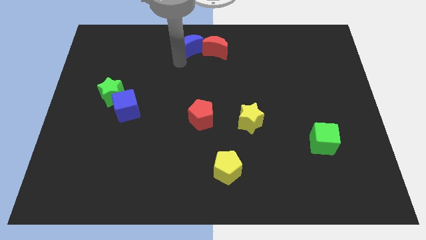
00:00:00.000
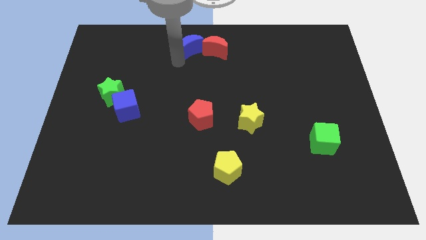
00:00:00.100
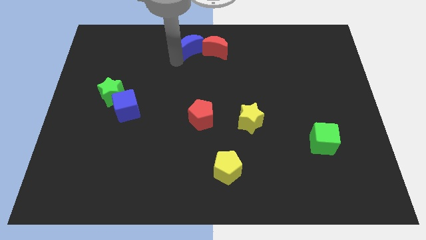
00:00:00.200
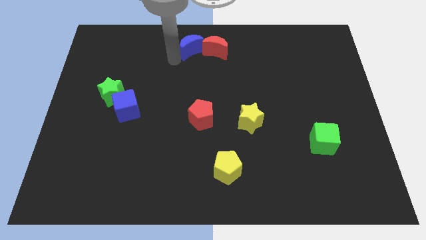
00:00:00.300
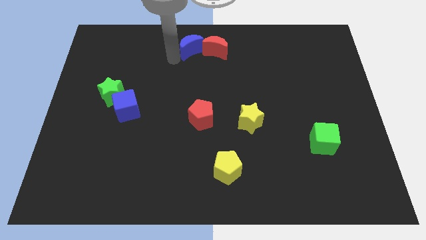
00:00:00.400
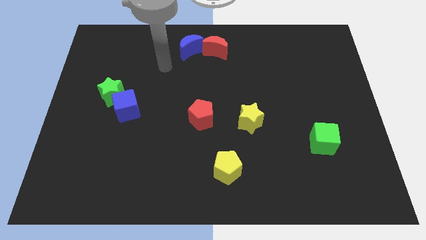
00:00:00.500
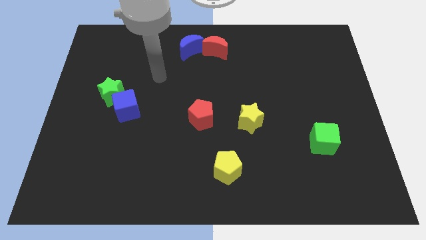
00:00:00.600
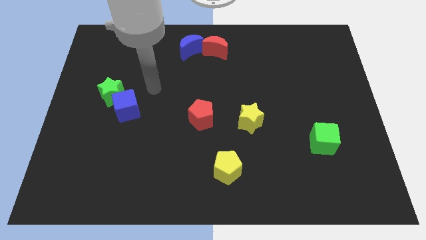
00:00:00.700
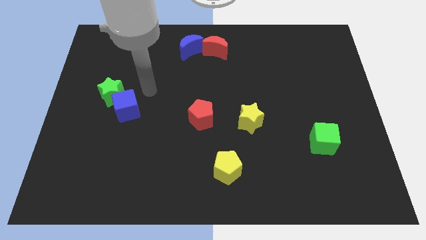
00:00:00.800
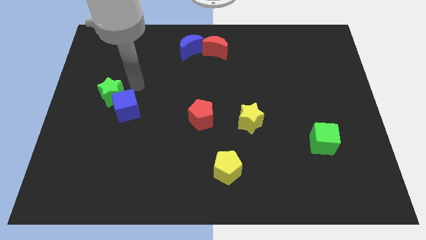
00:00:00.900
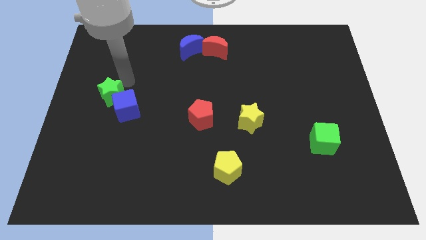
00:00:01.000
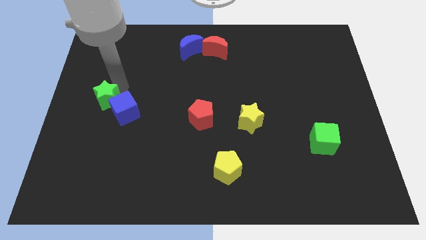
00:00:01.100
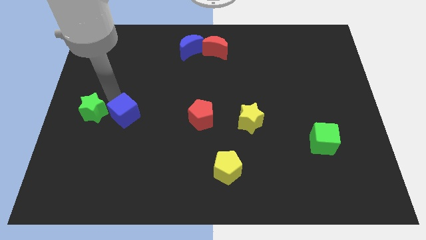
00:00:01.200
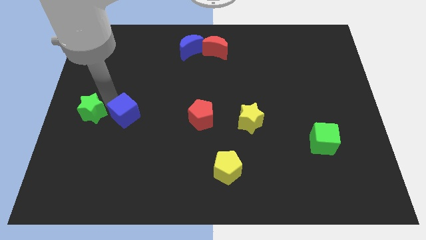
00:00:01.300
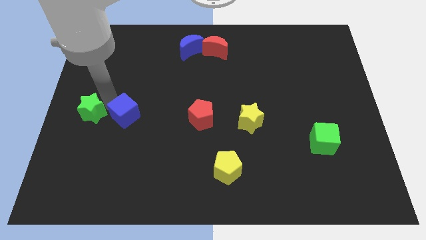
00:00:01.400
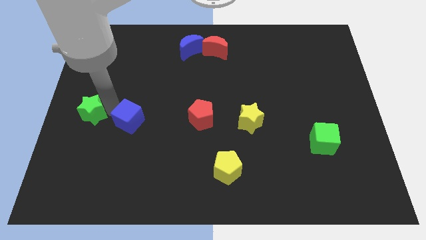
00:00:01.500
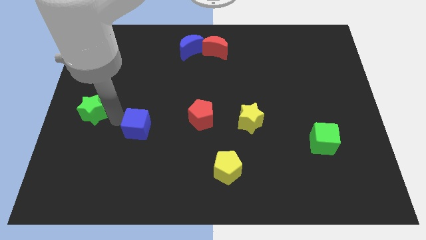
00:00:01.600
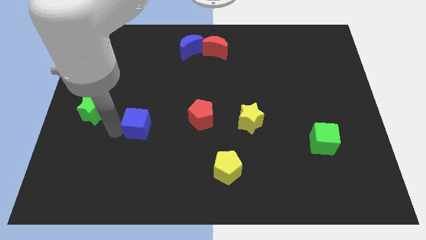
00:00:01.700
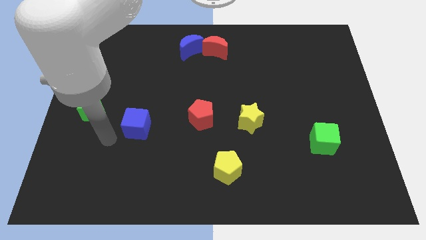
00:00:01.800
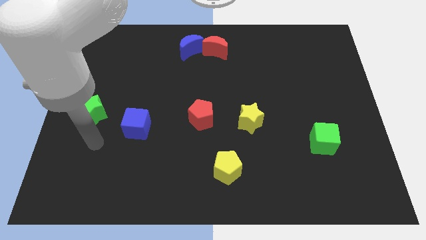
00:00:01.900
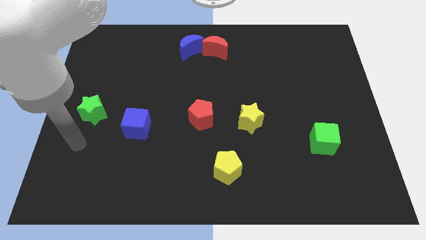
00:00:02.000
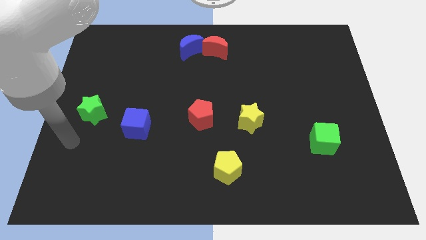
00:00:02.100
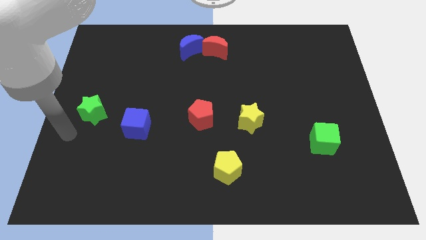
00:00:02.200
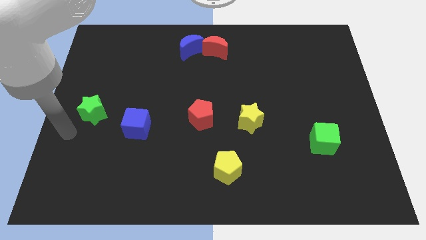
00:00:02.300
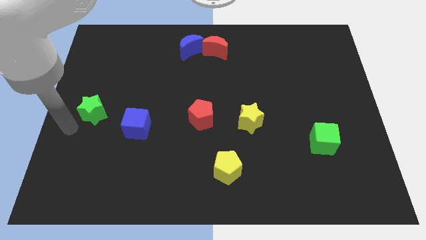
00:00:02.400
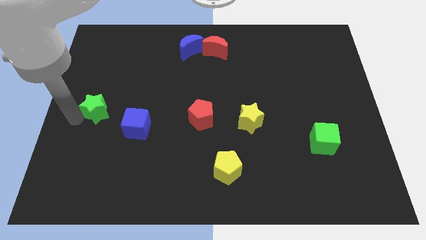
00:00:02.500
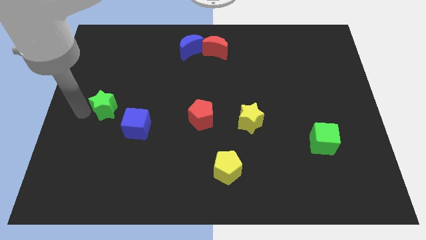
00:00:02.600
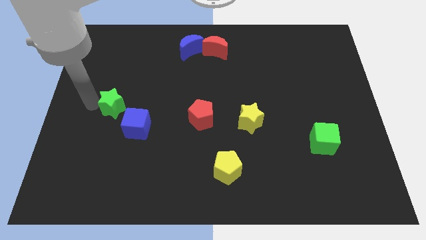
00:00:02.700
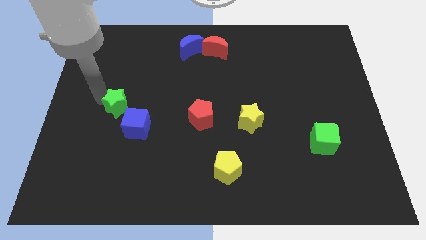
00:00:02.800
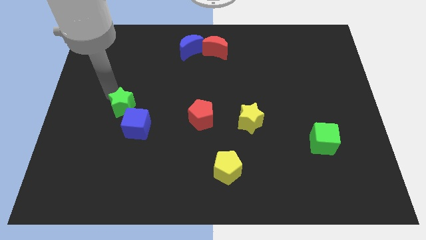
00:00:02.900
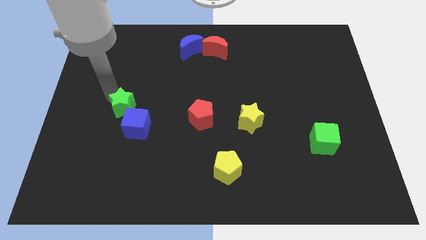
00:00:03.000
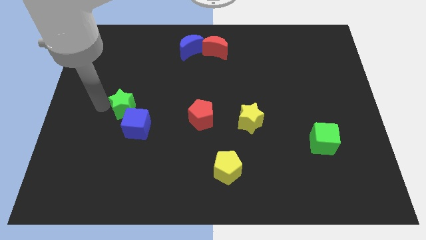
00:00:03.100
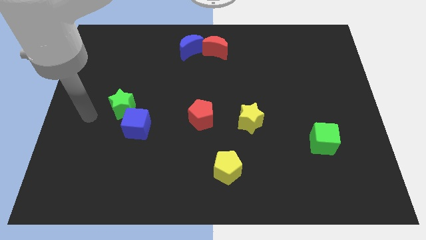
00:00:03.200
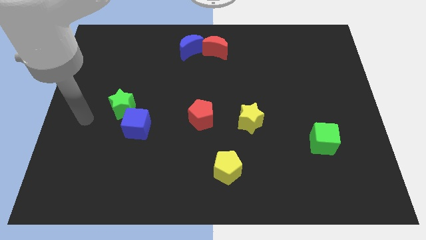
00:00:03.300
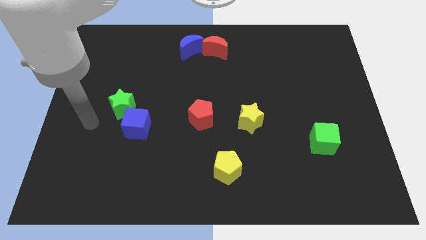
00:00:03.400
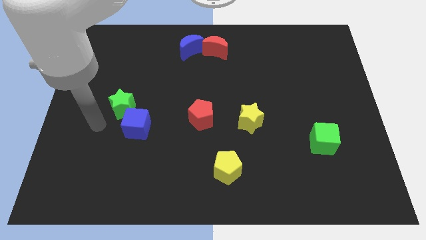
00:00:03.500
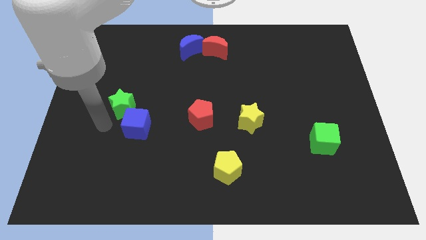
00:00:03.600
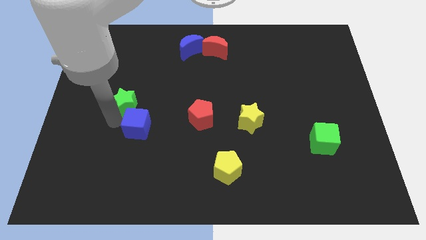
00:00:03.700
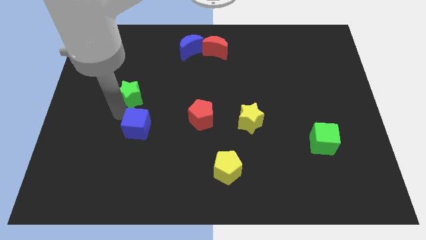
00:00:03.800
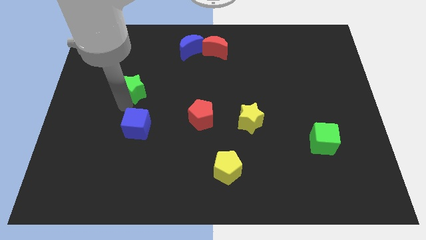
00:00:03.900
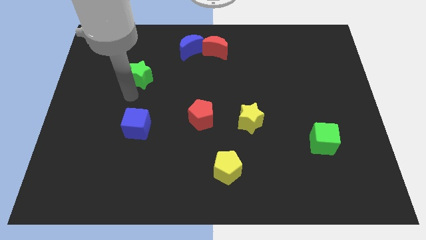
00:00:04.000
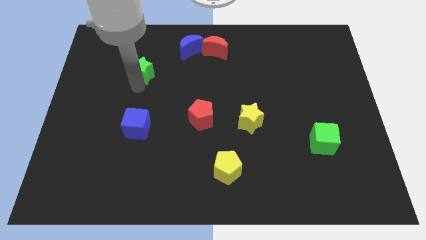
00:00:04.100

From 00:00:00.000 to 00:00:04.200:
move green star away from the blue cube

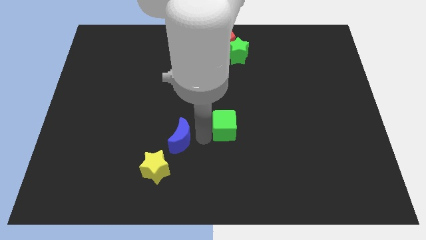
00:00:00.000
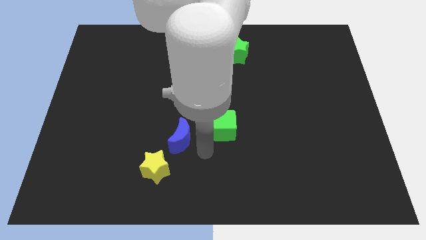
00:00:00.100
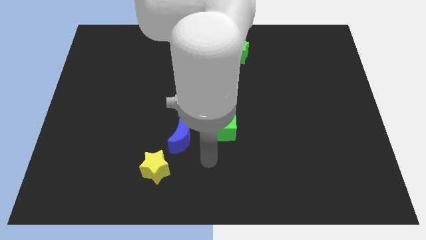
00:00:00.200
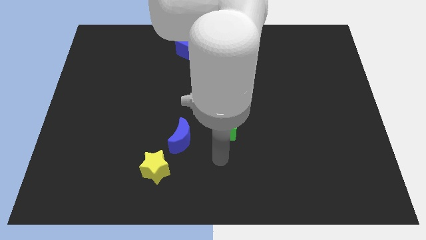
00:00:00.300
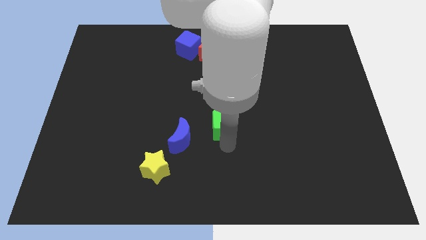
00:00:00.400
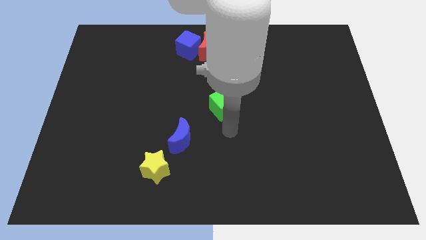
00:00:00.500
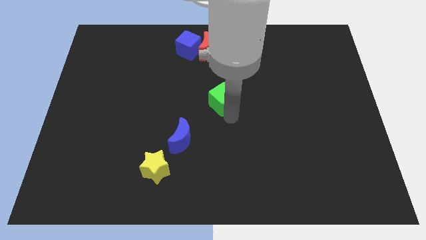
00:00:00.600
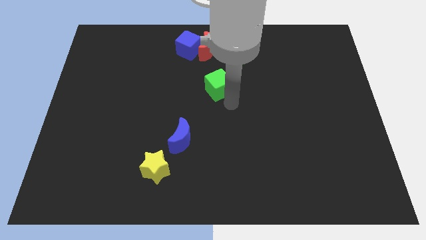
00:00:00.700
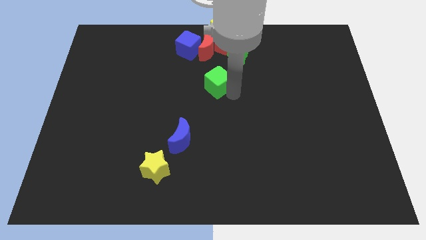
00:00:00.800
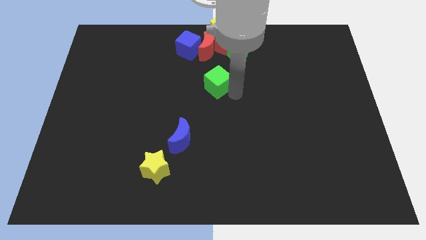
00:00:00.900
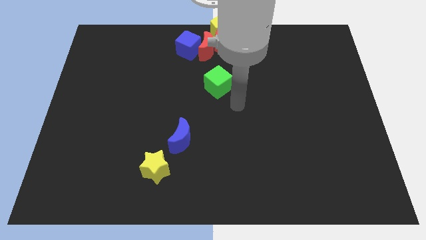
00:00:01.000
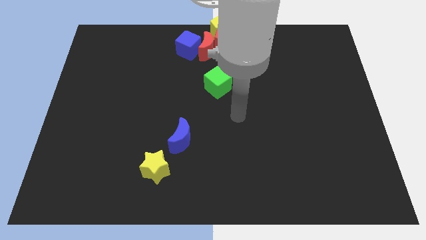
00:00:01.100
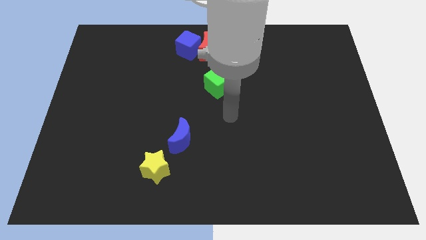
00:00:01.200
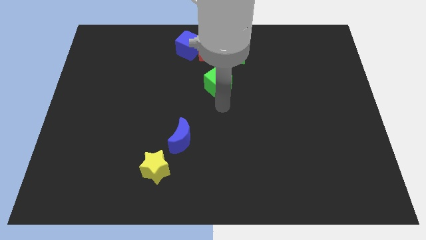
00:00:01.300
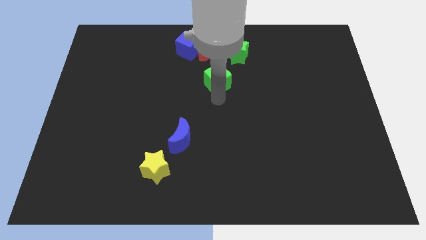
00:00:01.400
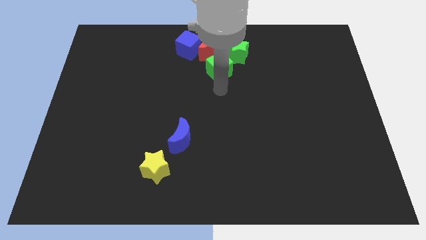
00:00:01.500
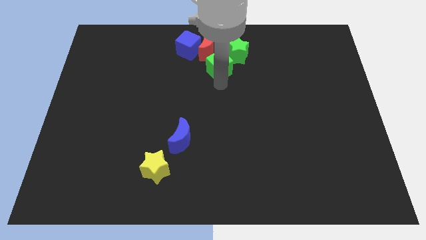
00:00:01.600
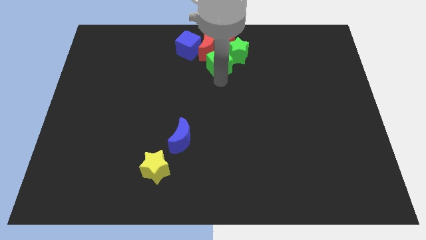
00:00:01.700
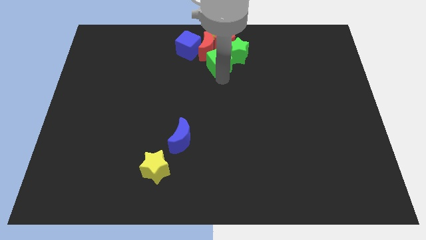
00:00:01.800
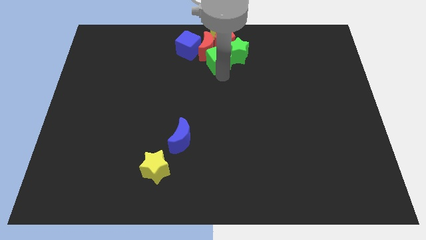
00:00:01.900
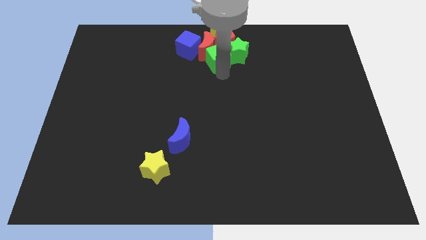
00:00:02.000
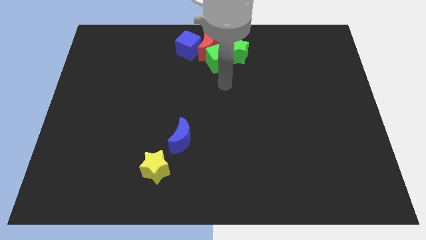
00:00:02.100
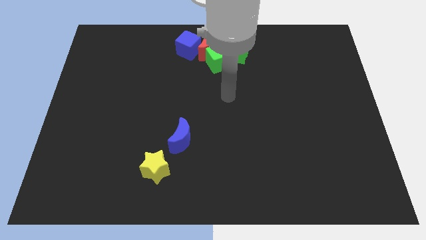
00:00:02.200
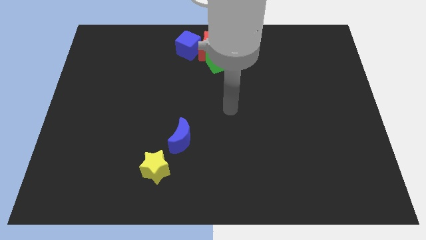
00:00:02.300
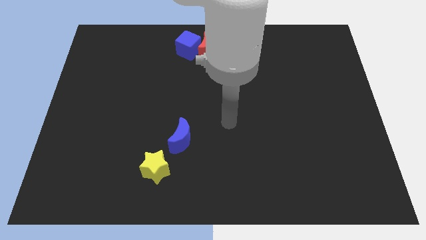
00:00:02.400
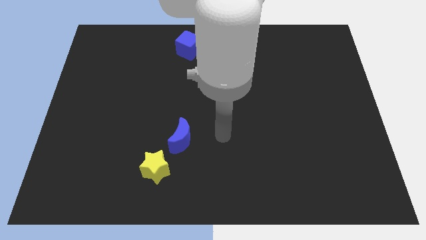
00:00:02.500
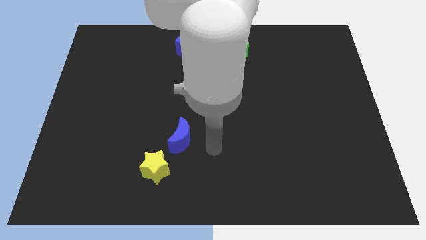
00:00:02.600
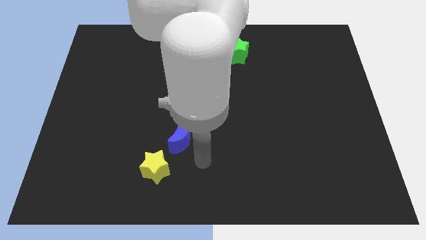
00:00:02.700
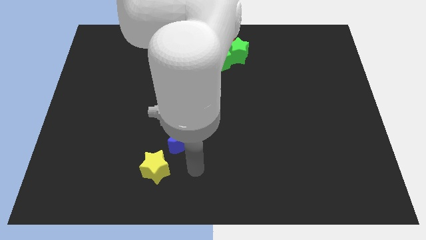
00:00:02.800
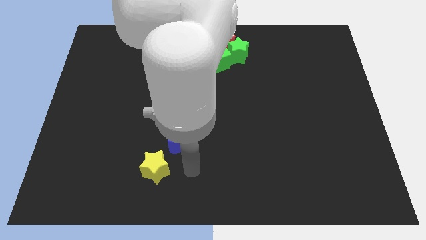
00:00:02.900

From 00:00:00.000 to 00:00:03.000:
move the green cube into the red moon

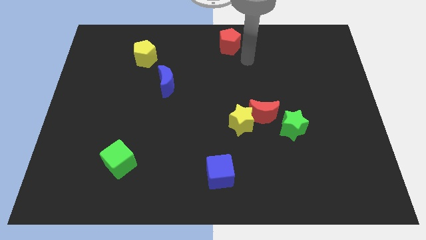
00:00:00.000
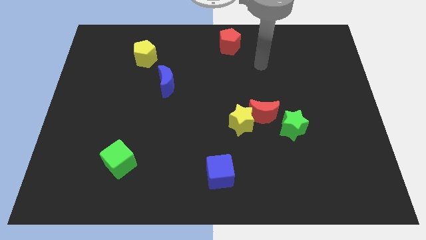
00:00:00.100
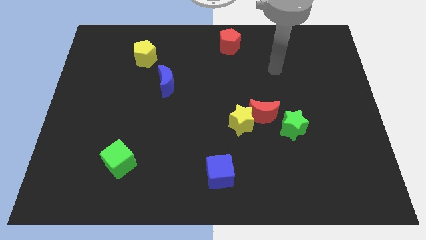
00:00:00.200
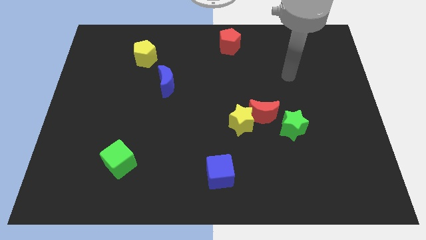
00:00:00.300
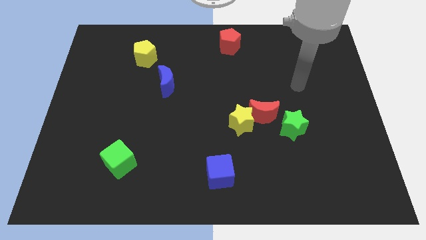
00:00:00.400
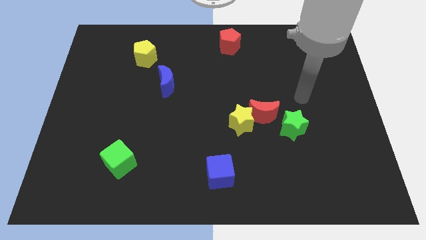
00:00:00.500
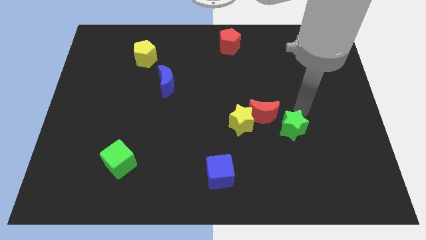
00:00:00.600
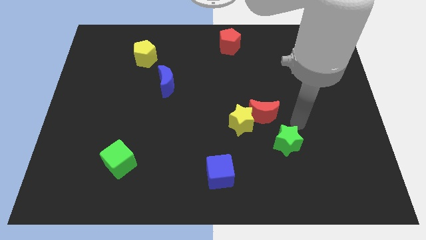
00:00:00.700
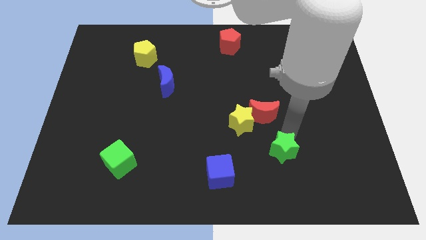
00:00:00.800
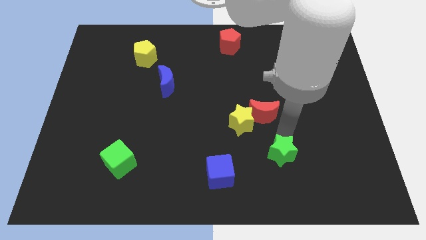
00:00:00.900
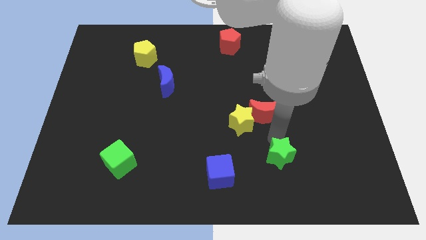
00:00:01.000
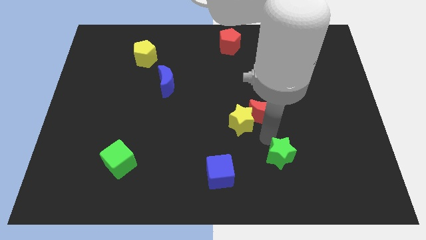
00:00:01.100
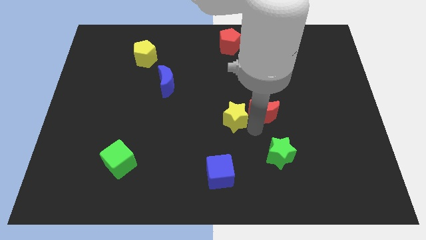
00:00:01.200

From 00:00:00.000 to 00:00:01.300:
slightly move green star towards the blue cube

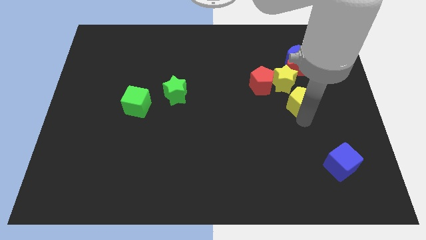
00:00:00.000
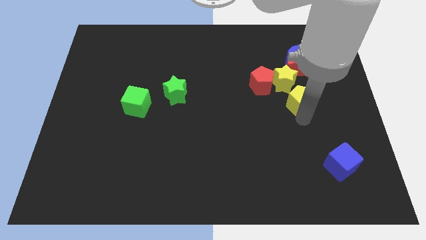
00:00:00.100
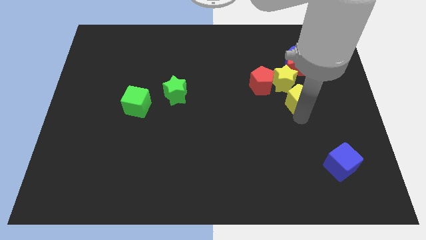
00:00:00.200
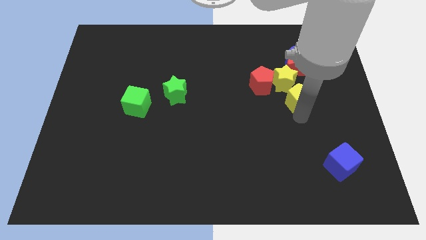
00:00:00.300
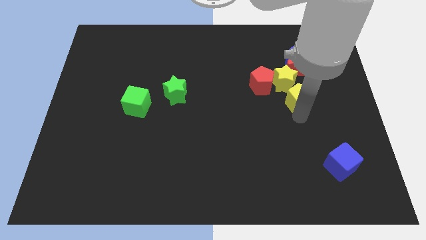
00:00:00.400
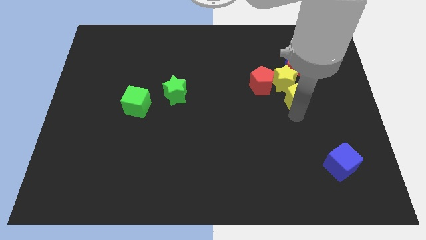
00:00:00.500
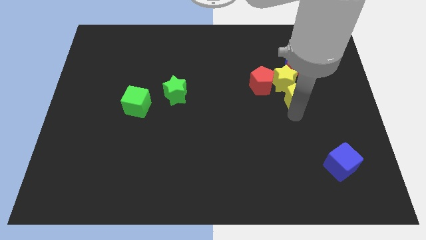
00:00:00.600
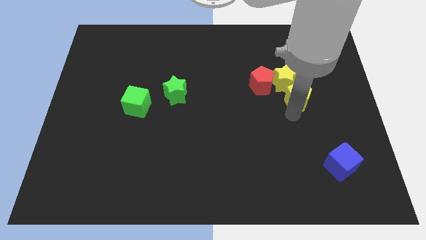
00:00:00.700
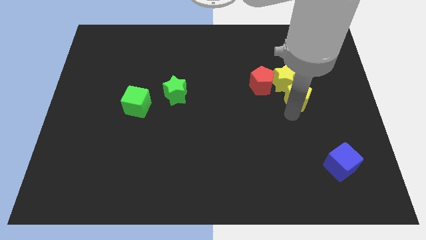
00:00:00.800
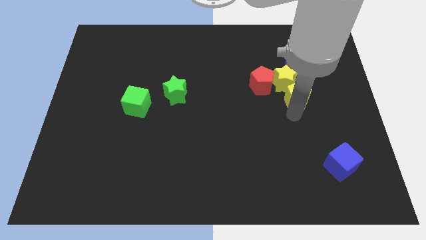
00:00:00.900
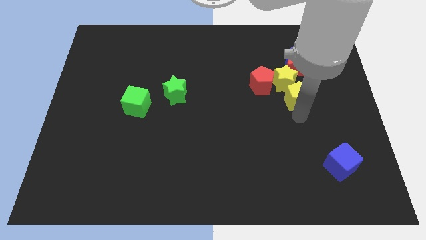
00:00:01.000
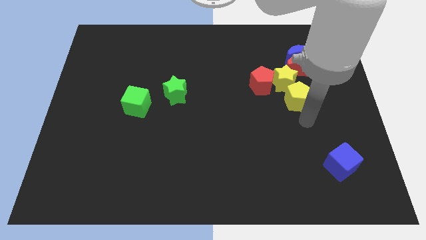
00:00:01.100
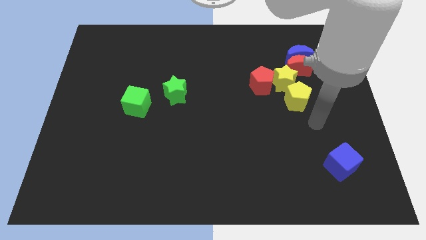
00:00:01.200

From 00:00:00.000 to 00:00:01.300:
push yellow pentagon into yellow star
